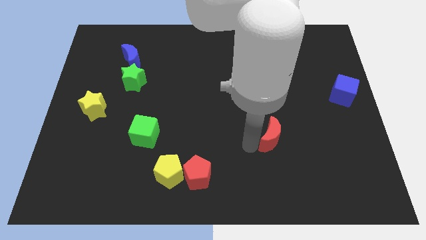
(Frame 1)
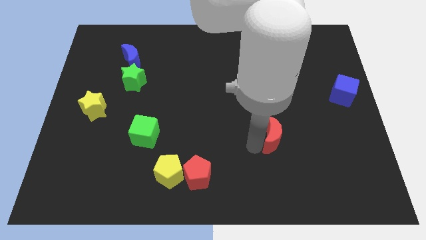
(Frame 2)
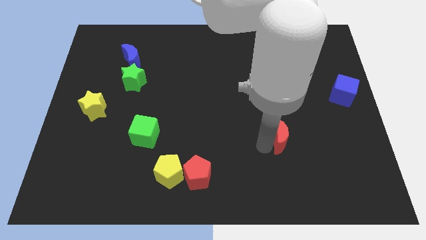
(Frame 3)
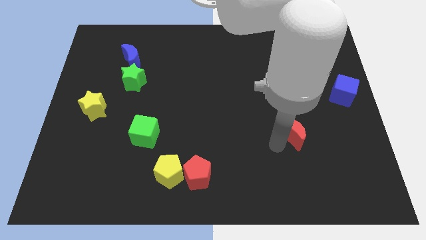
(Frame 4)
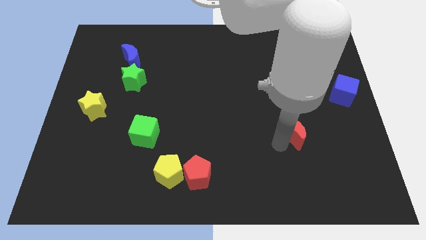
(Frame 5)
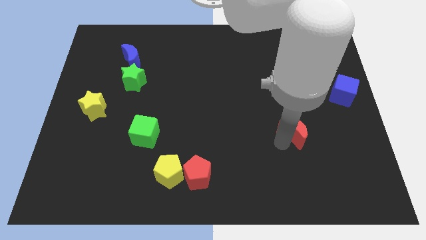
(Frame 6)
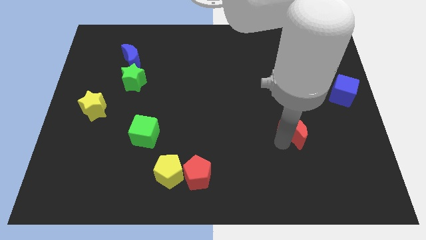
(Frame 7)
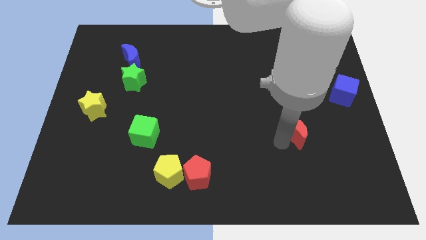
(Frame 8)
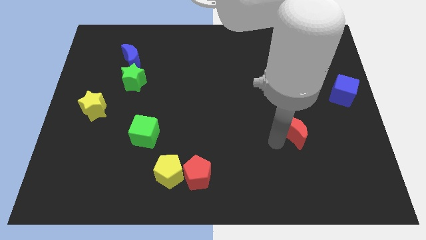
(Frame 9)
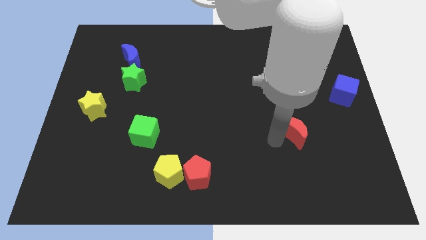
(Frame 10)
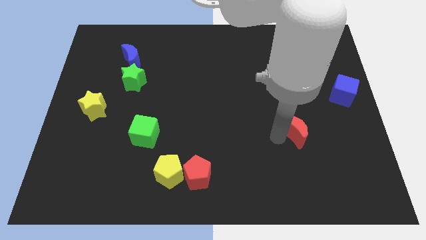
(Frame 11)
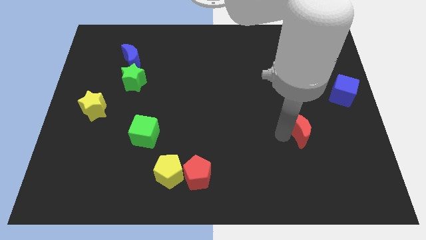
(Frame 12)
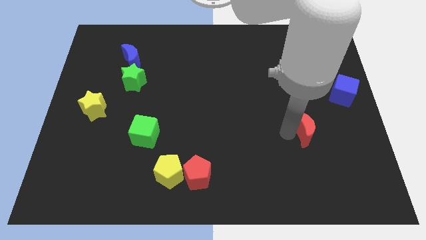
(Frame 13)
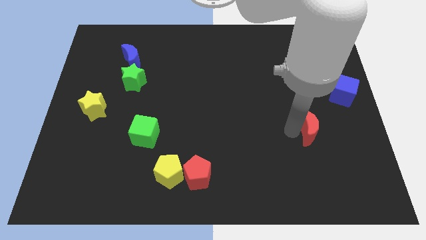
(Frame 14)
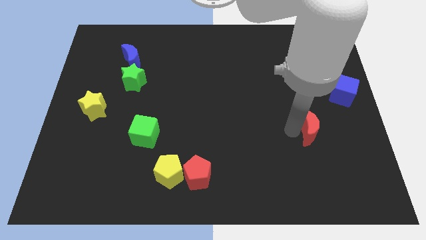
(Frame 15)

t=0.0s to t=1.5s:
move red moon towards blue cube

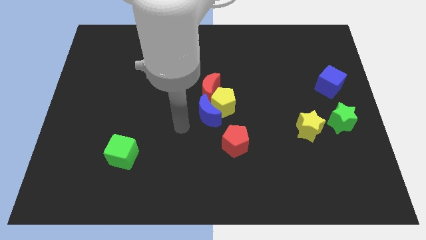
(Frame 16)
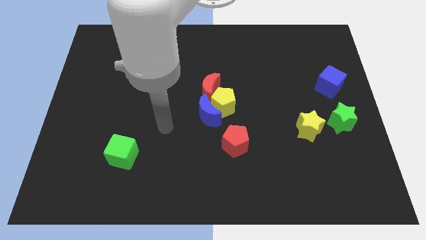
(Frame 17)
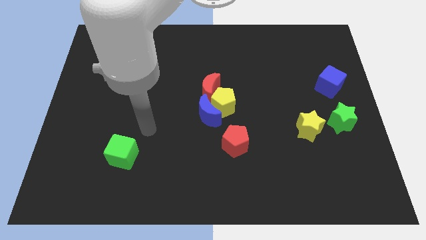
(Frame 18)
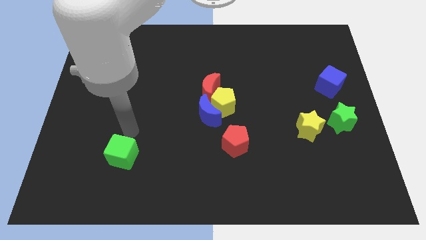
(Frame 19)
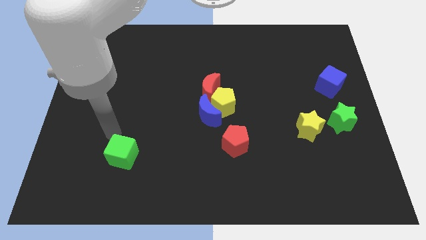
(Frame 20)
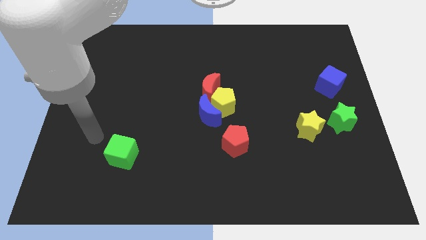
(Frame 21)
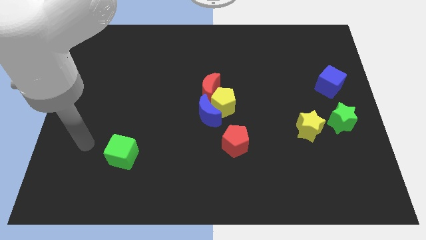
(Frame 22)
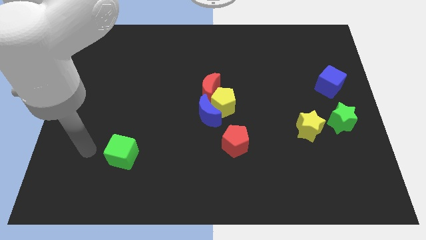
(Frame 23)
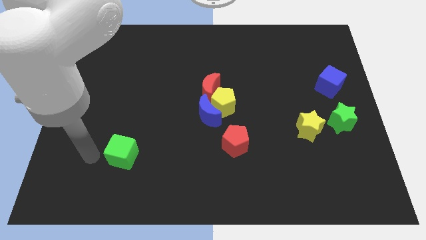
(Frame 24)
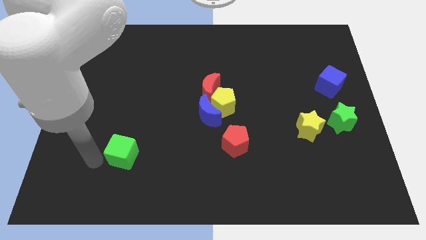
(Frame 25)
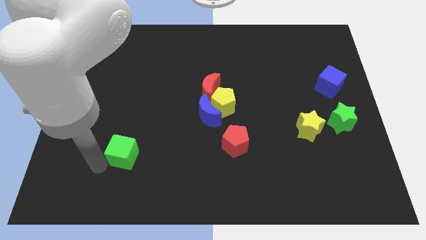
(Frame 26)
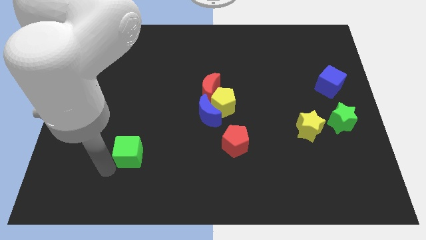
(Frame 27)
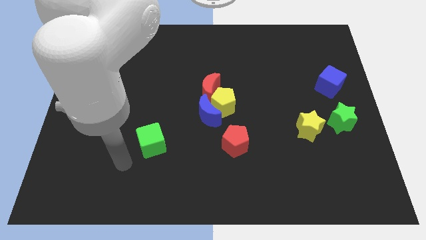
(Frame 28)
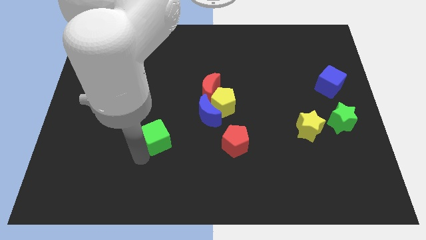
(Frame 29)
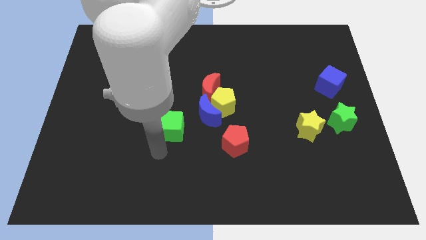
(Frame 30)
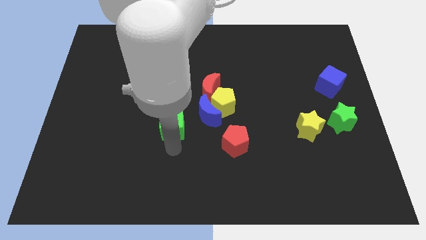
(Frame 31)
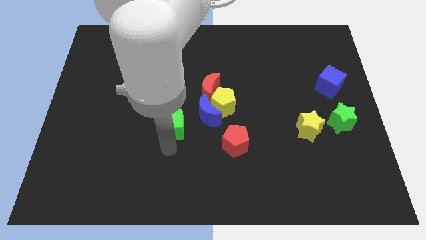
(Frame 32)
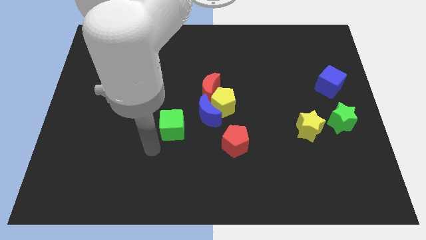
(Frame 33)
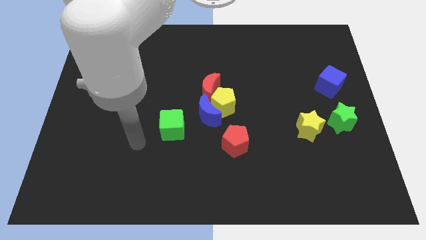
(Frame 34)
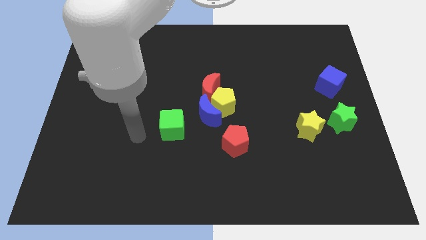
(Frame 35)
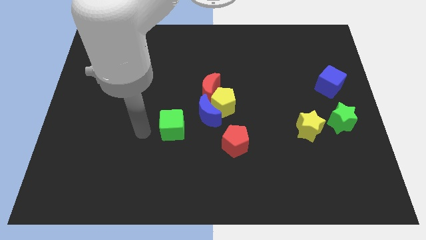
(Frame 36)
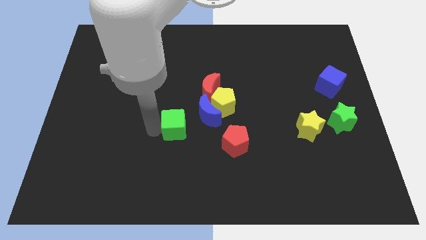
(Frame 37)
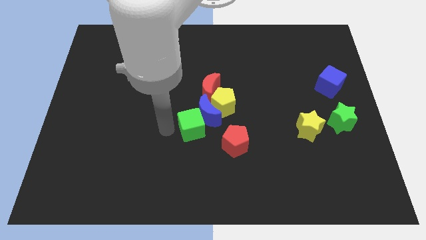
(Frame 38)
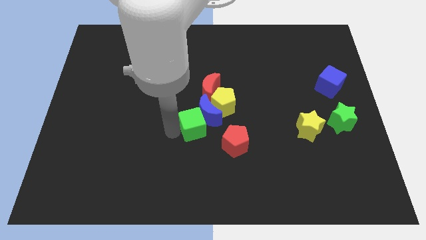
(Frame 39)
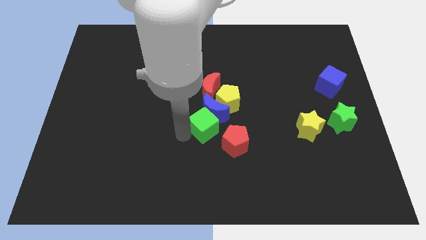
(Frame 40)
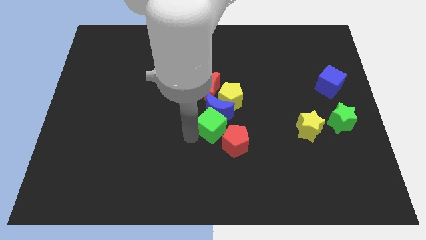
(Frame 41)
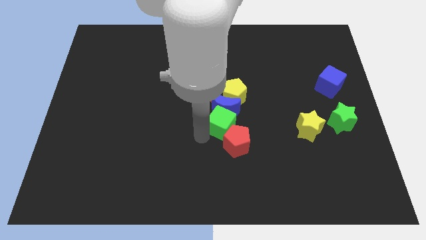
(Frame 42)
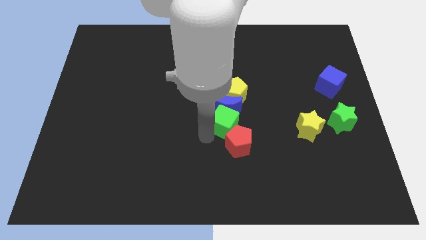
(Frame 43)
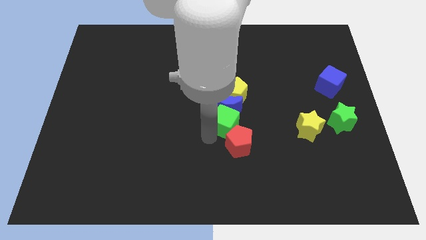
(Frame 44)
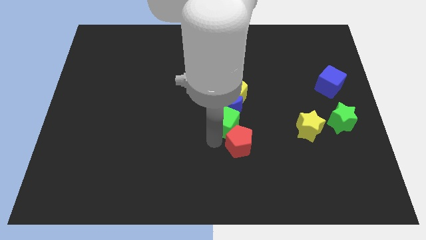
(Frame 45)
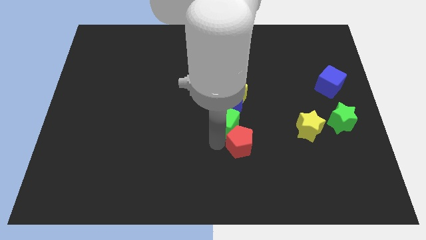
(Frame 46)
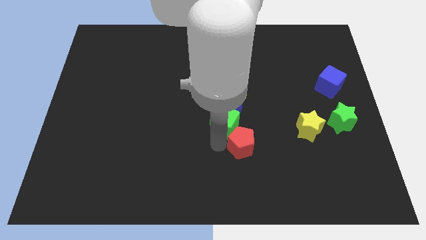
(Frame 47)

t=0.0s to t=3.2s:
move green cube to the bottom side of the blue moon

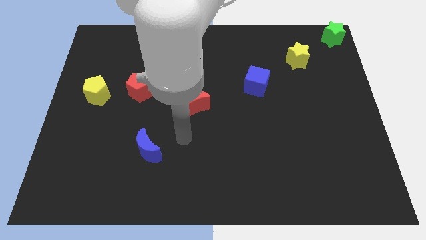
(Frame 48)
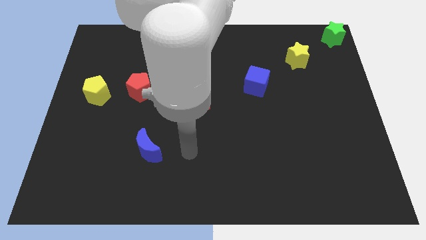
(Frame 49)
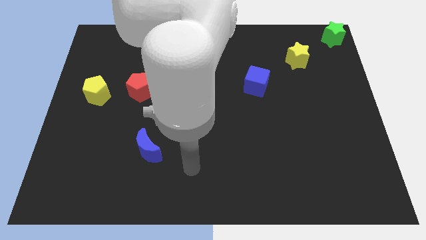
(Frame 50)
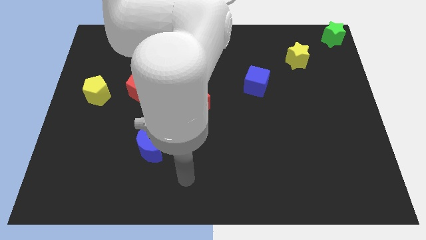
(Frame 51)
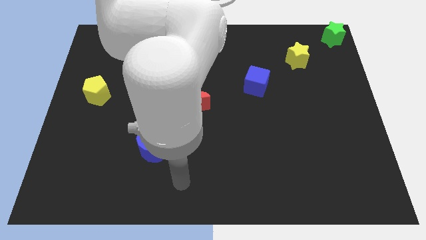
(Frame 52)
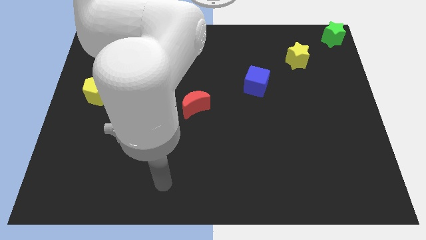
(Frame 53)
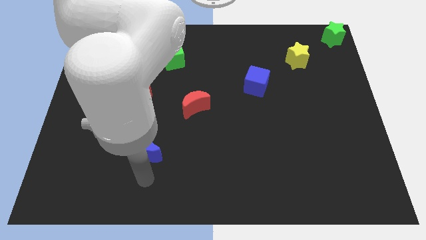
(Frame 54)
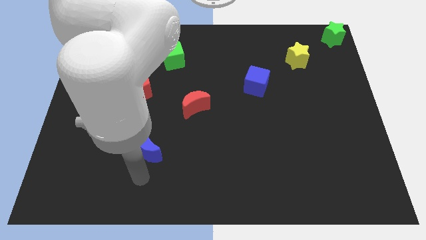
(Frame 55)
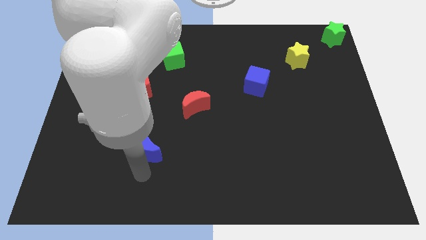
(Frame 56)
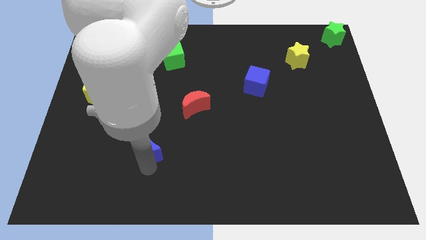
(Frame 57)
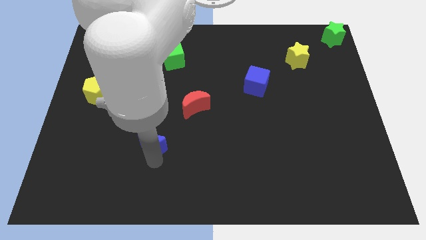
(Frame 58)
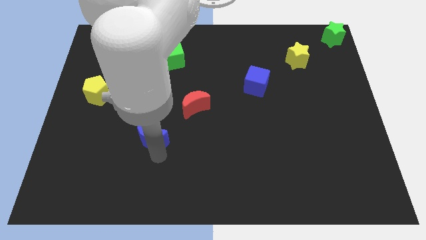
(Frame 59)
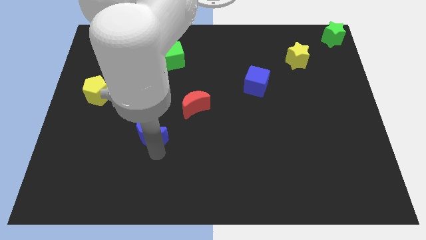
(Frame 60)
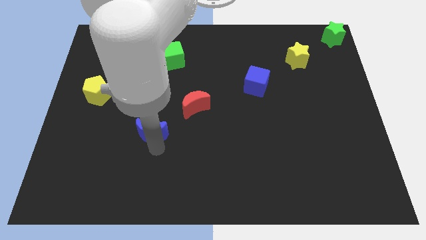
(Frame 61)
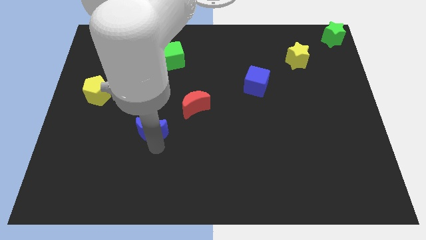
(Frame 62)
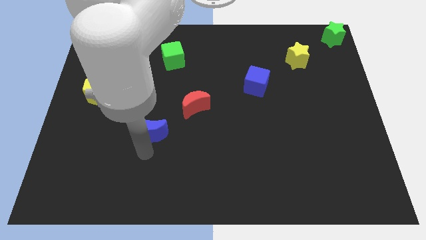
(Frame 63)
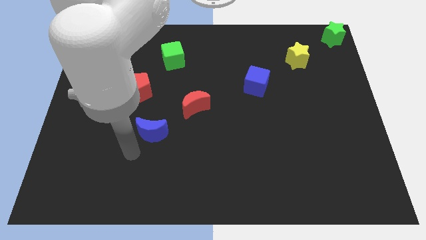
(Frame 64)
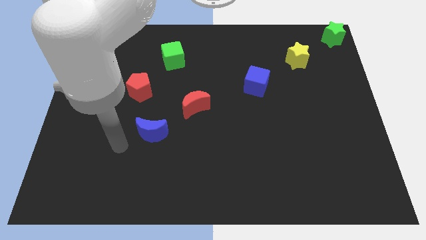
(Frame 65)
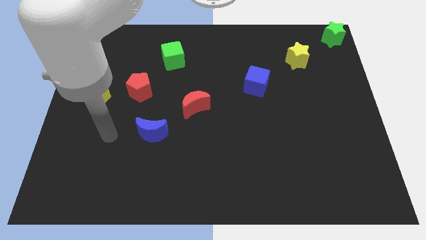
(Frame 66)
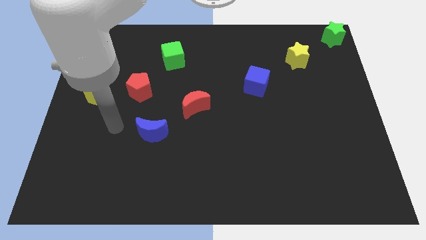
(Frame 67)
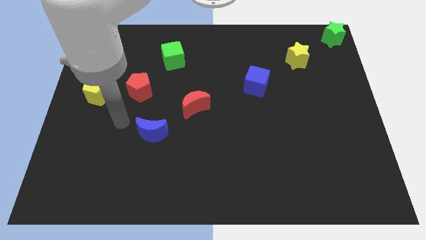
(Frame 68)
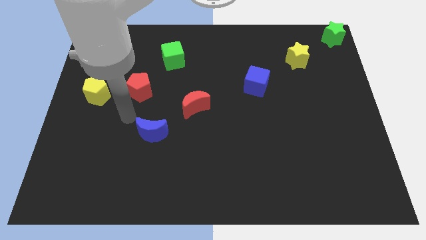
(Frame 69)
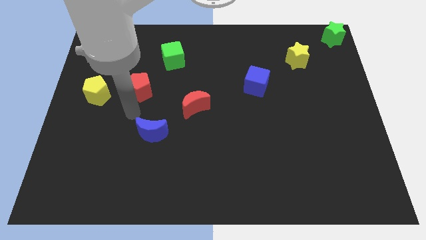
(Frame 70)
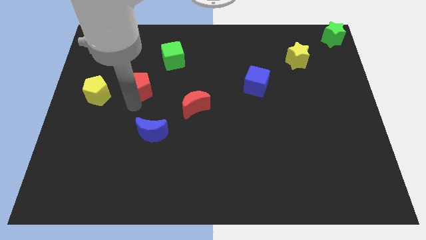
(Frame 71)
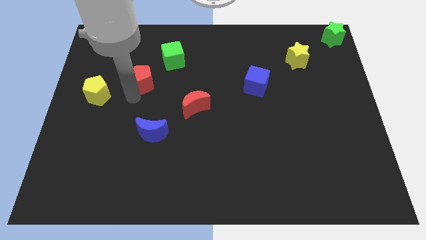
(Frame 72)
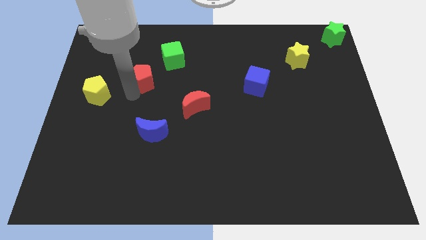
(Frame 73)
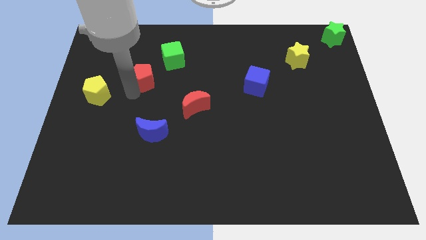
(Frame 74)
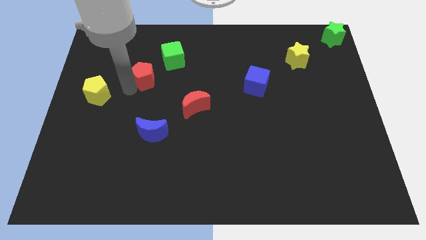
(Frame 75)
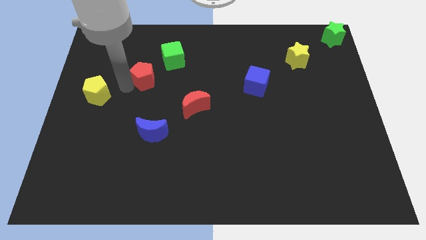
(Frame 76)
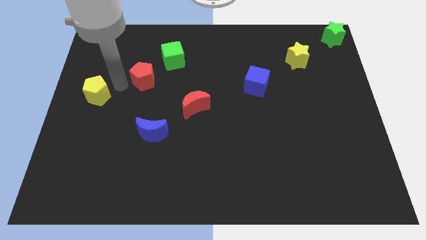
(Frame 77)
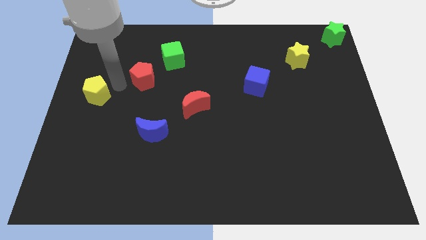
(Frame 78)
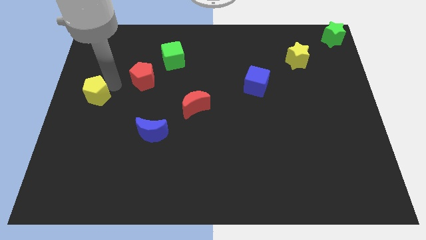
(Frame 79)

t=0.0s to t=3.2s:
make a triangle with red blocks and the blue moon

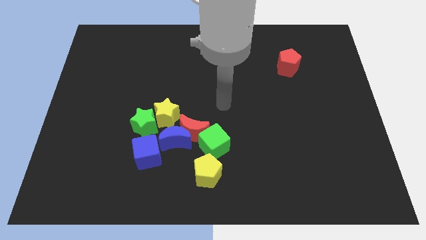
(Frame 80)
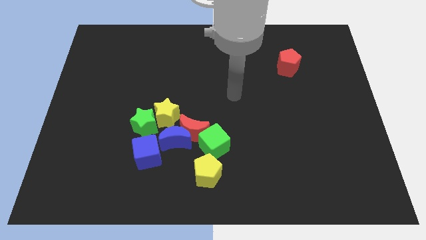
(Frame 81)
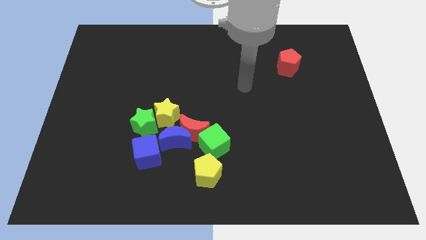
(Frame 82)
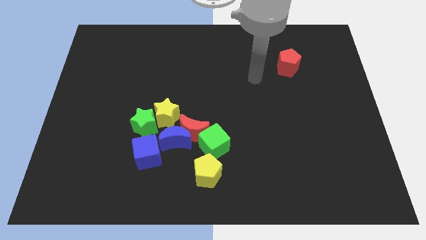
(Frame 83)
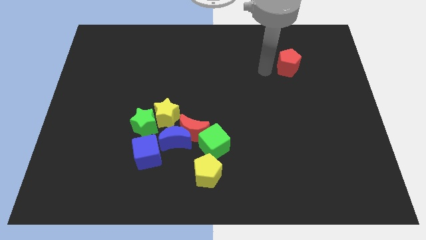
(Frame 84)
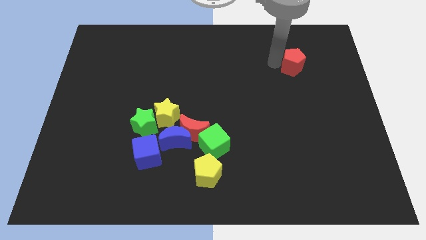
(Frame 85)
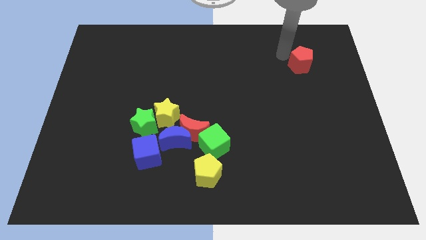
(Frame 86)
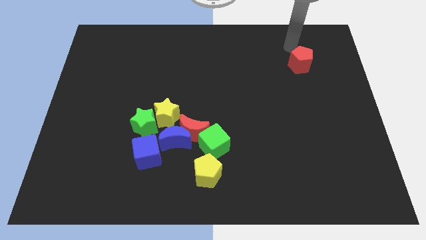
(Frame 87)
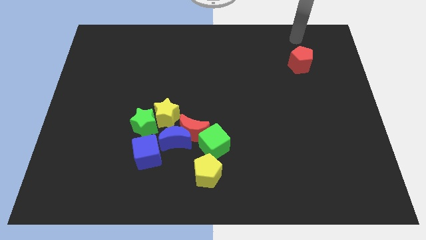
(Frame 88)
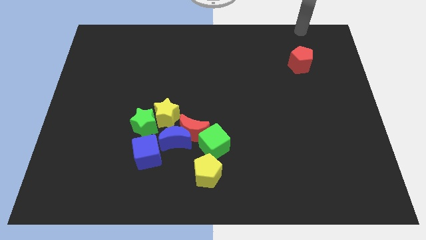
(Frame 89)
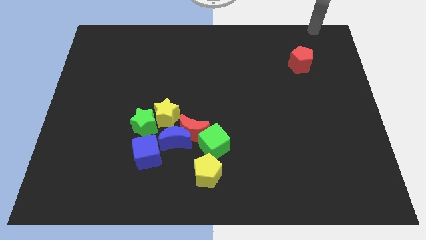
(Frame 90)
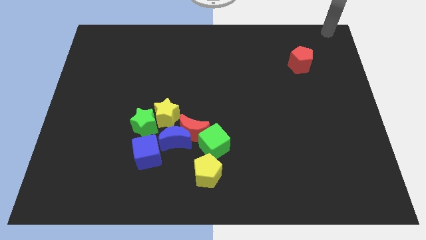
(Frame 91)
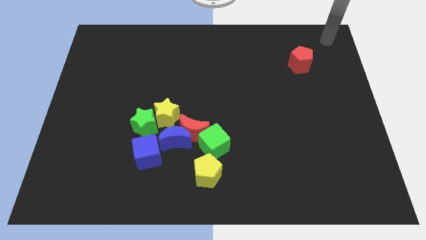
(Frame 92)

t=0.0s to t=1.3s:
move your arm to the top right side of the board
